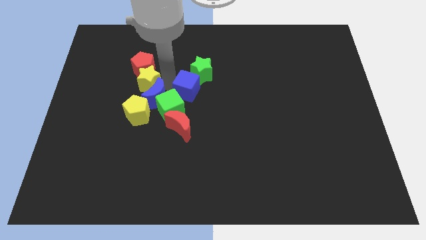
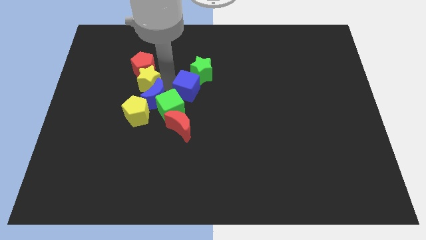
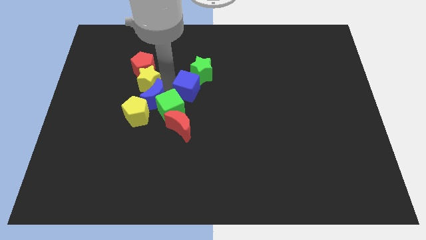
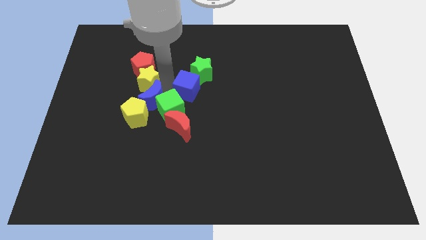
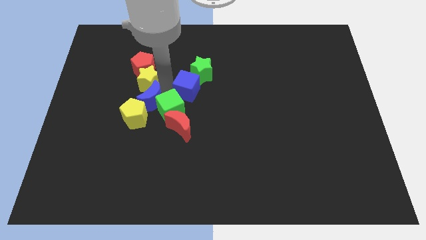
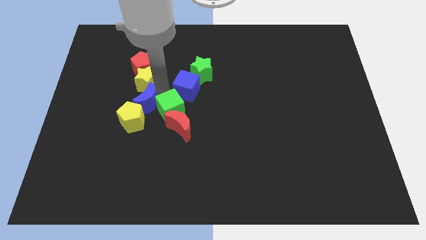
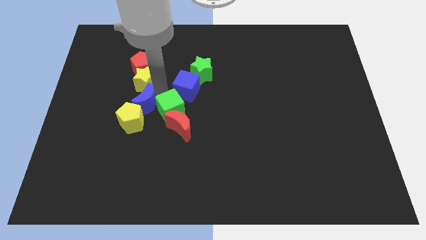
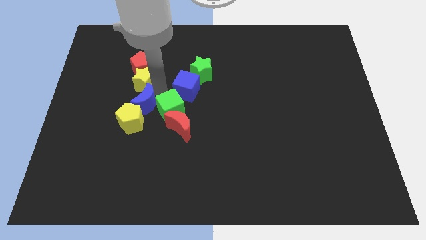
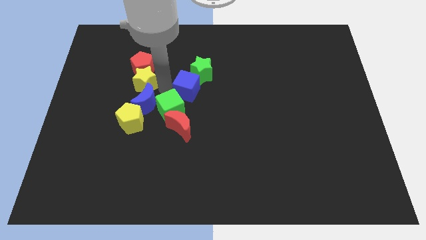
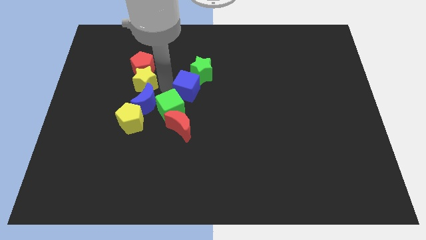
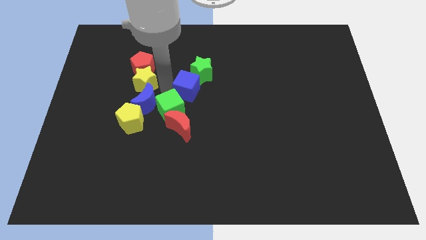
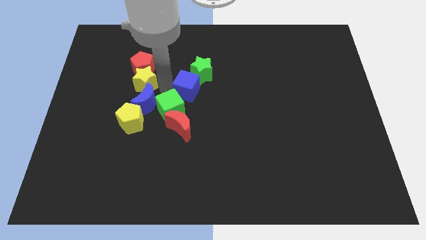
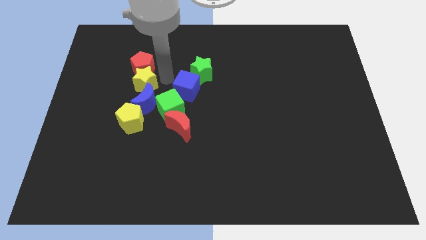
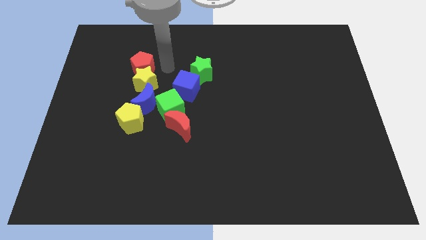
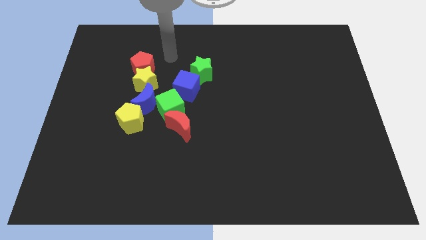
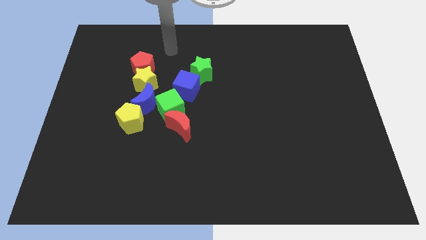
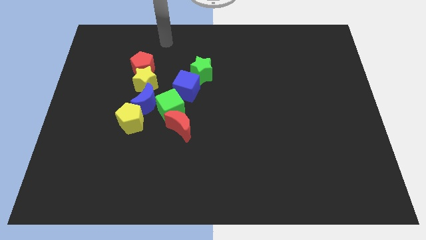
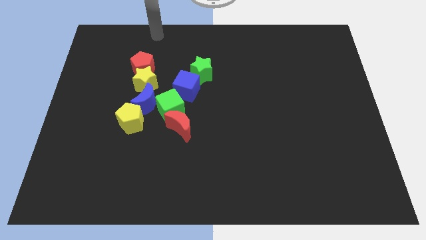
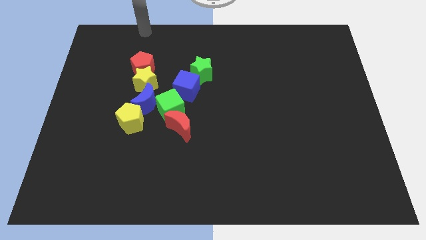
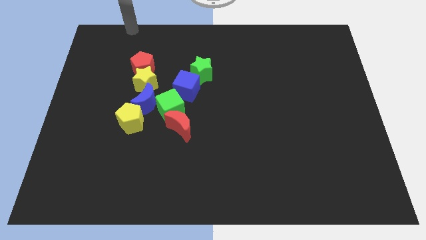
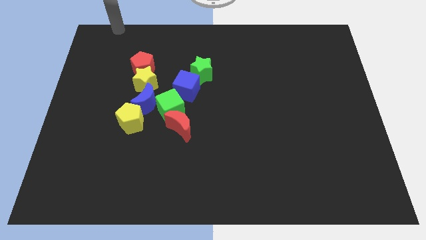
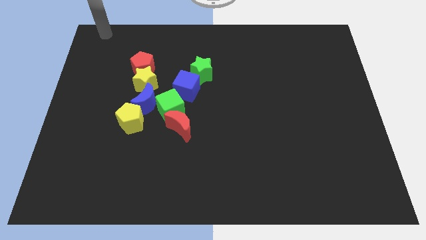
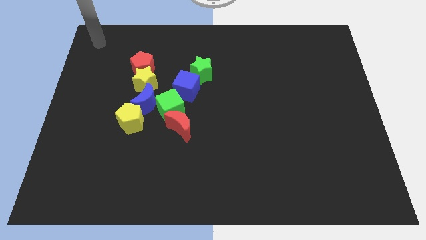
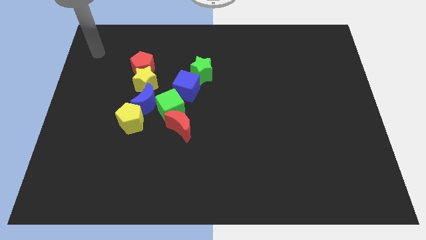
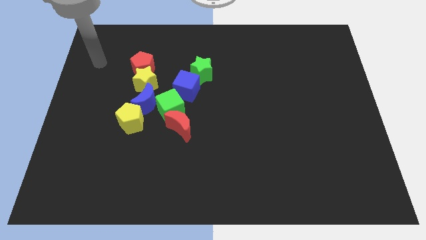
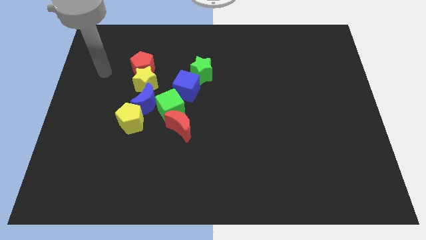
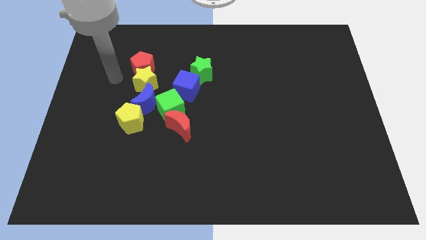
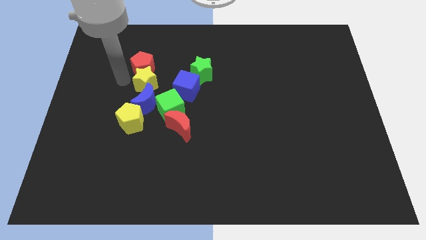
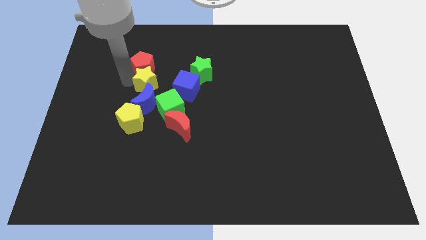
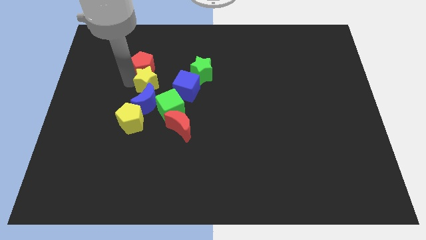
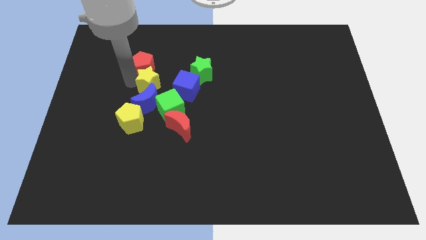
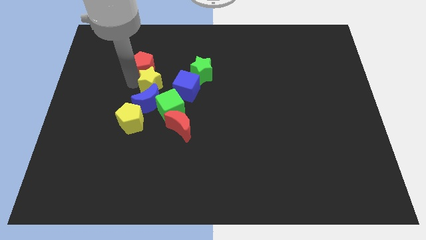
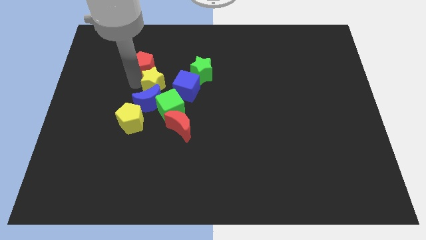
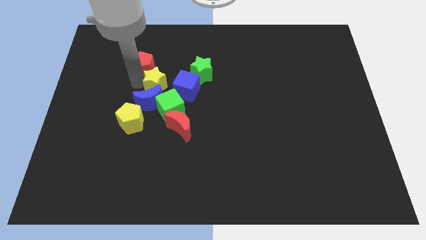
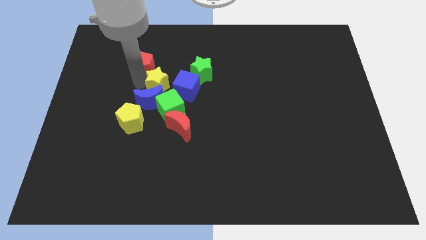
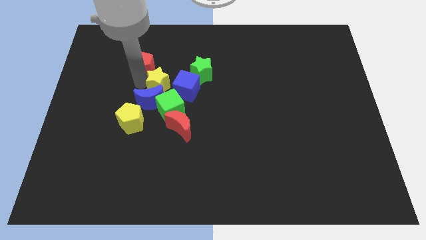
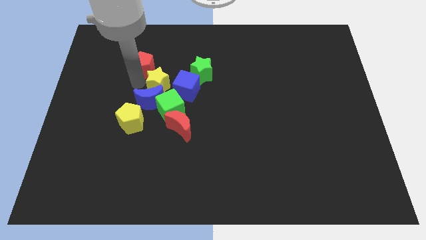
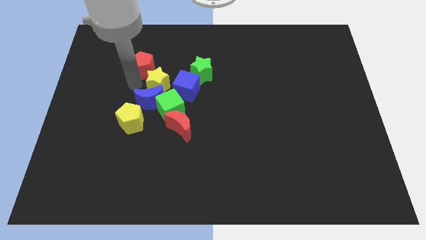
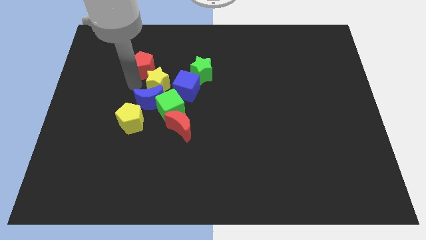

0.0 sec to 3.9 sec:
slide the yellow star close to the blue cube

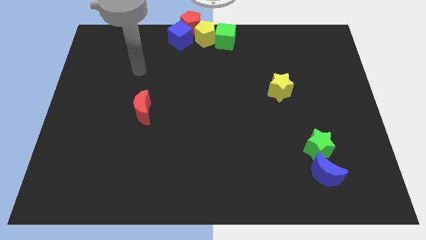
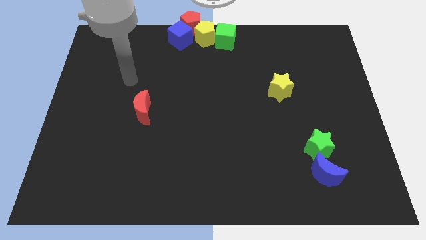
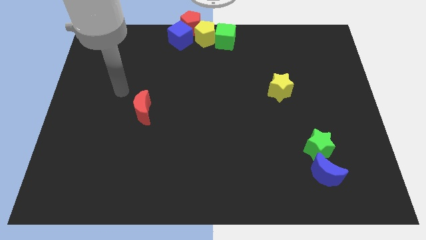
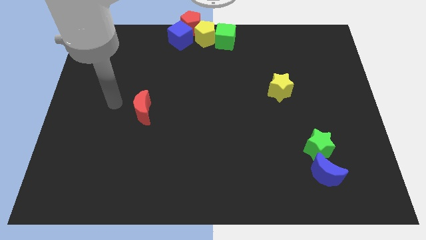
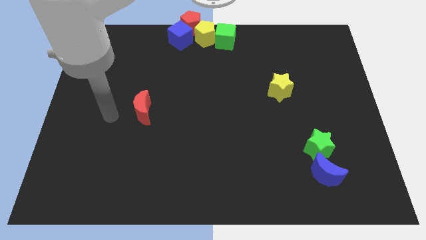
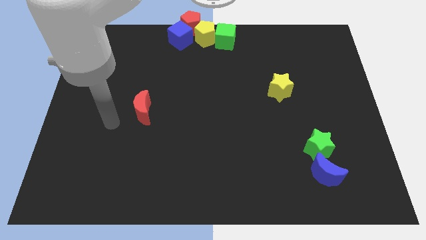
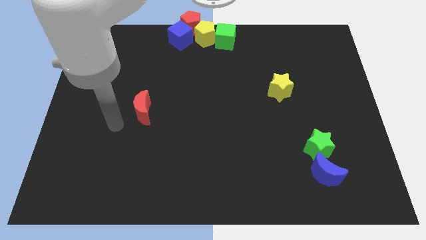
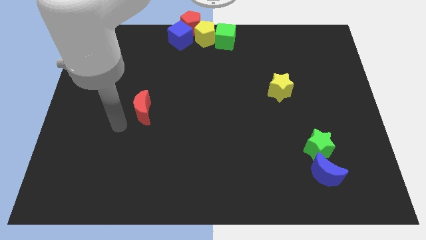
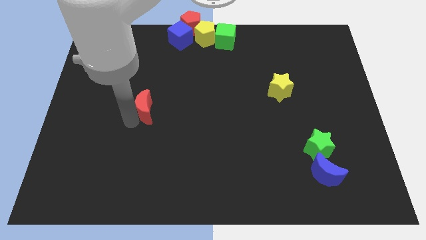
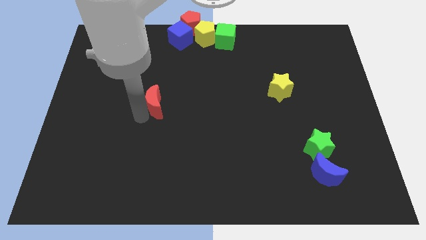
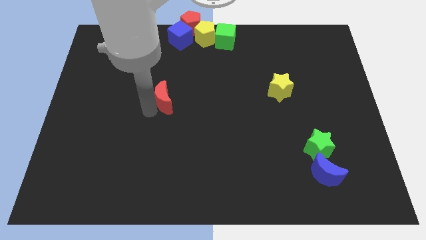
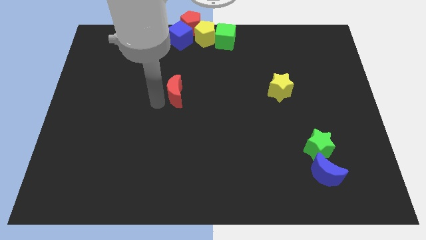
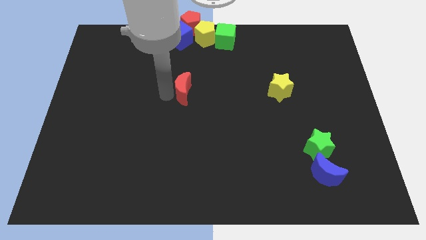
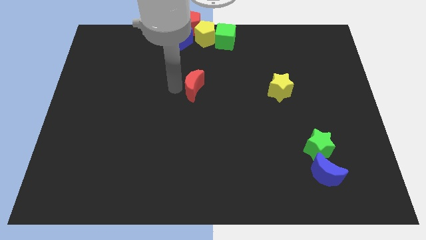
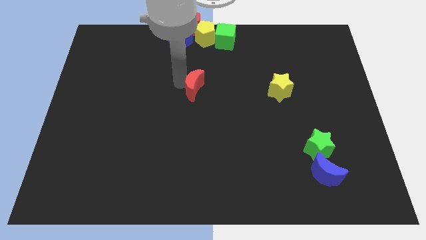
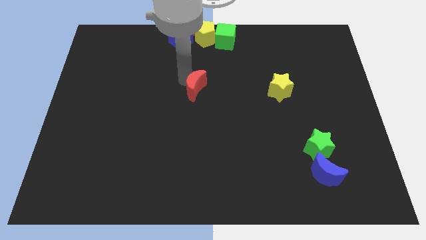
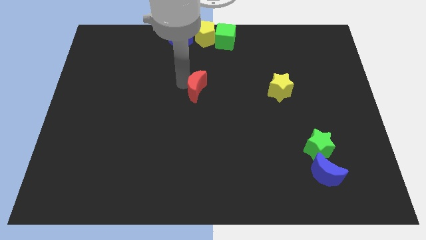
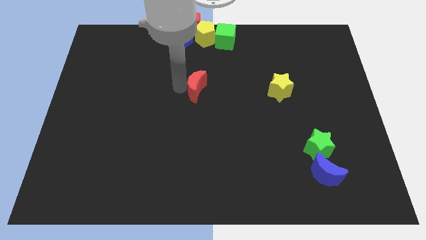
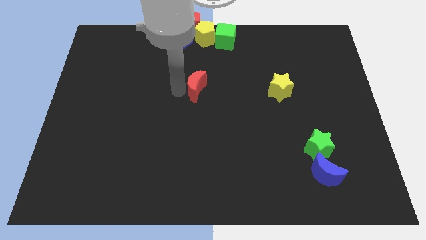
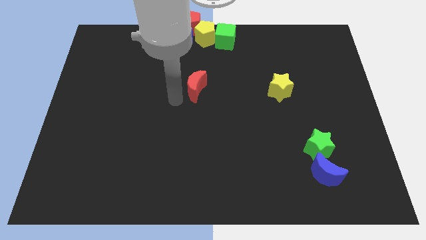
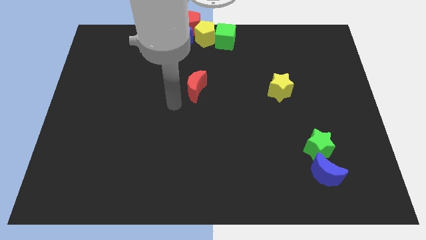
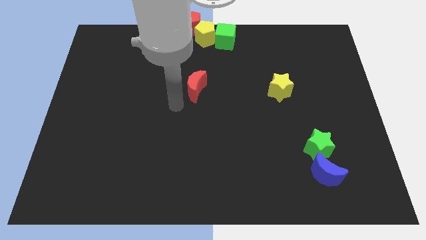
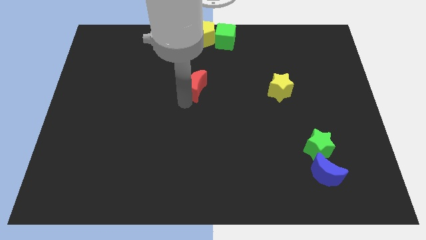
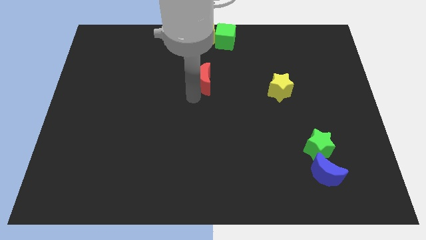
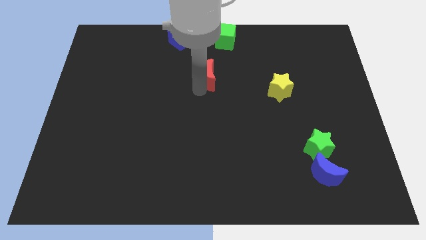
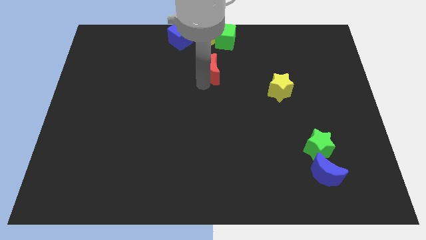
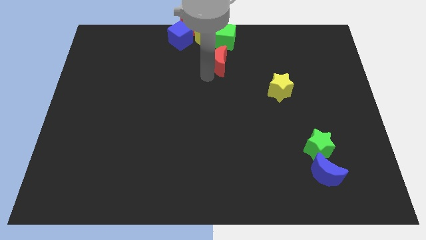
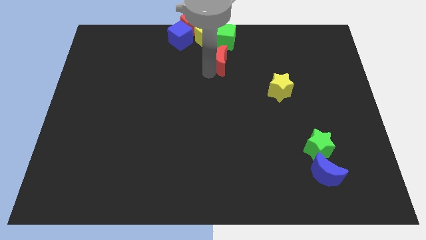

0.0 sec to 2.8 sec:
place the red moon below the green cube

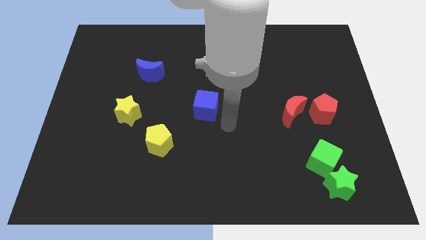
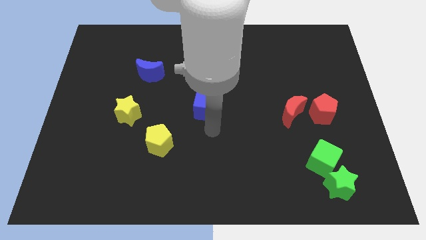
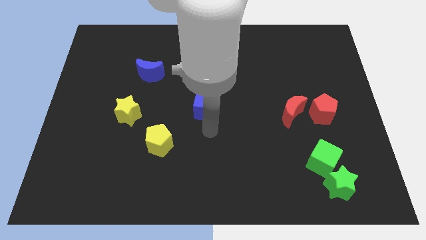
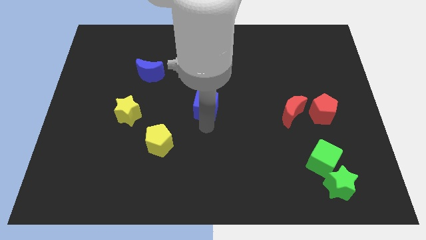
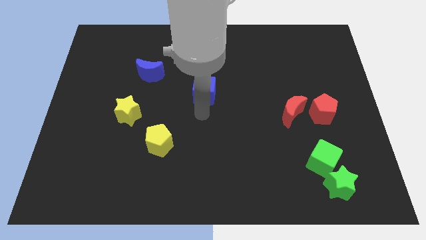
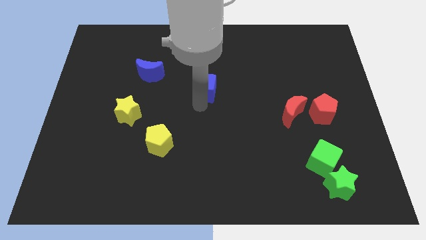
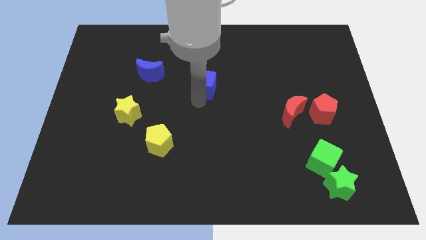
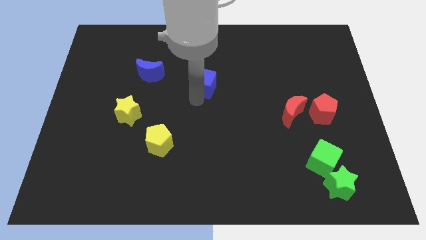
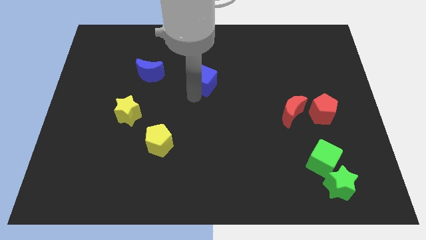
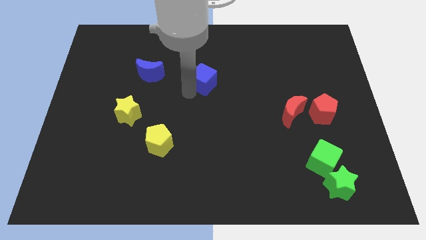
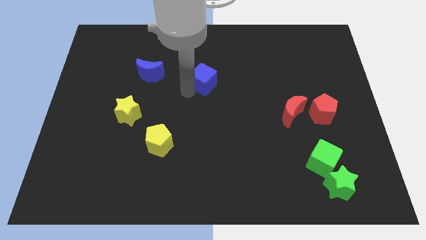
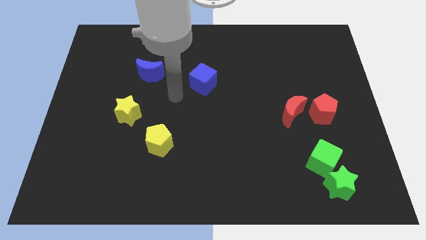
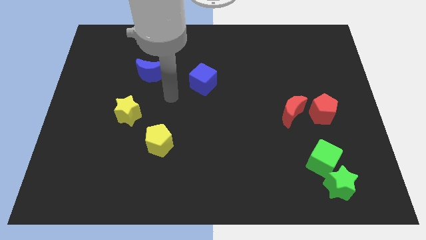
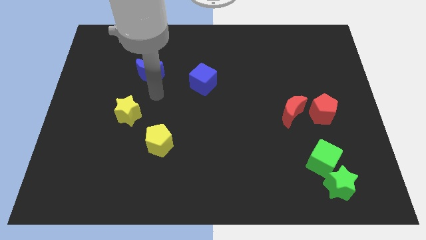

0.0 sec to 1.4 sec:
move the blue cube towards the top center of the board

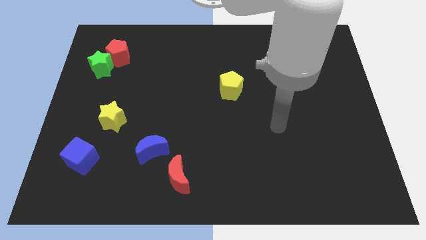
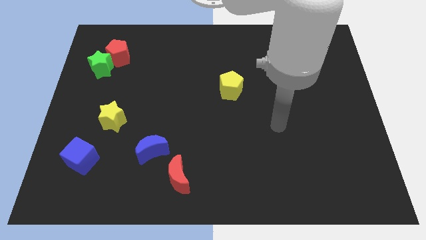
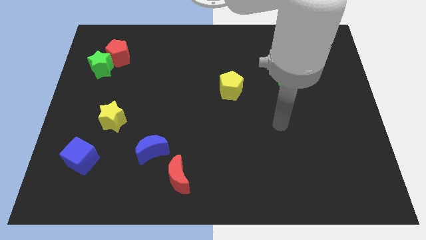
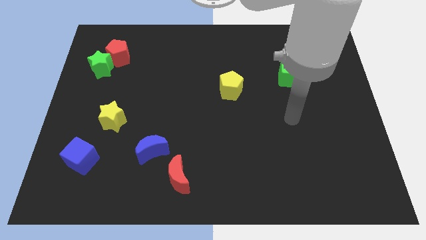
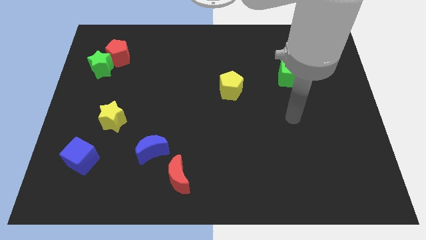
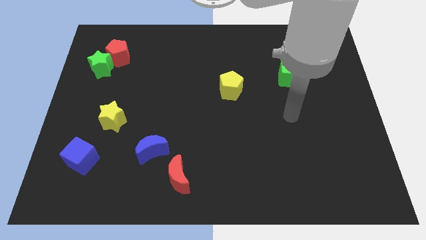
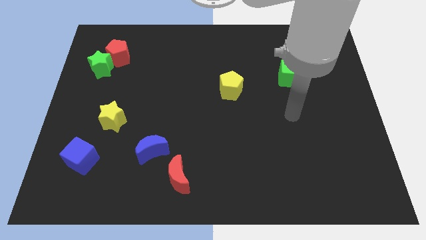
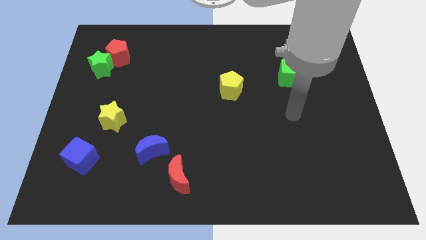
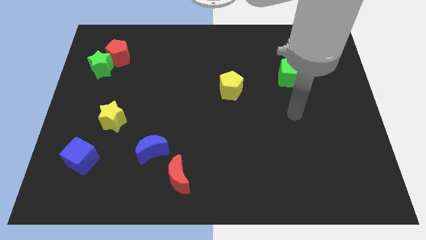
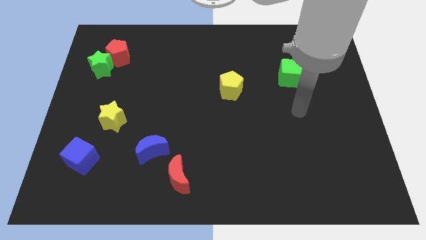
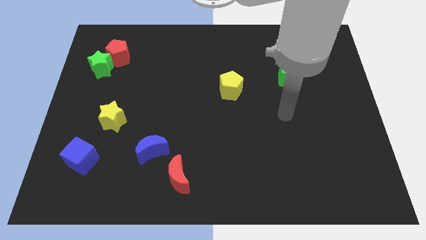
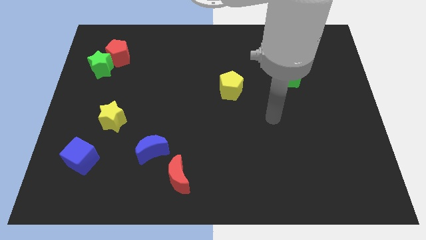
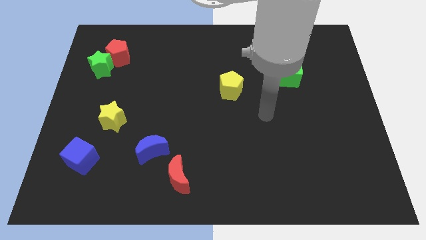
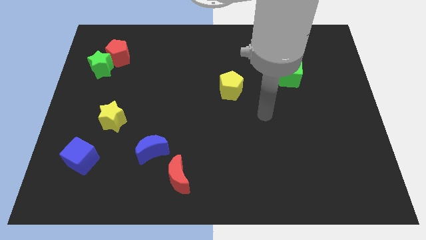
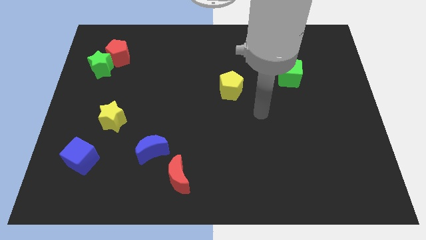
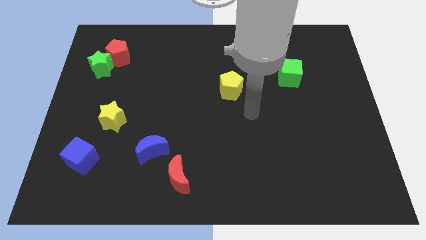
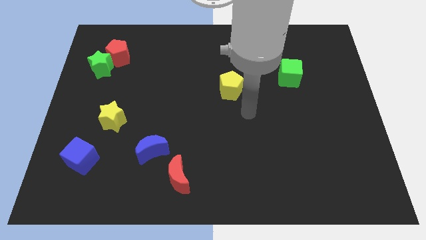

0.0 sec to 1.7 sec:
place your arm at the bottom right side of the yellow pentagon
